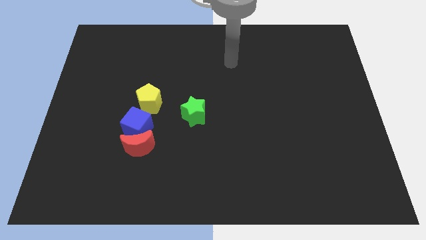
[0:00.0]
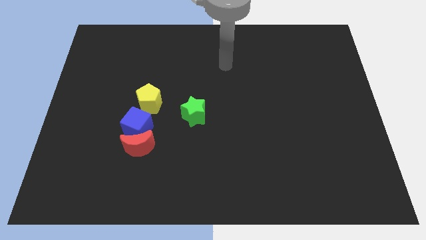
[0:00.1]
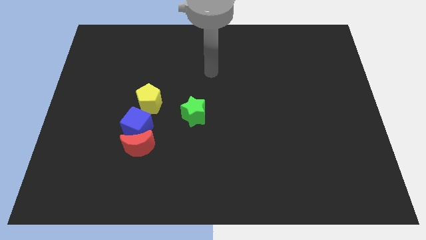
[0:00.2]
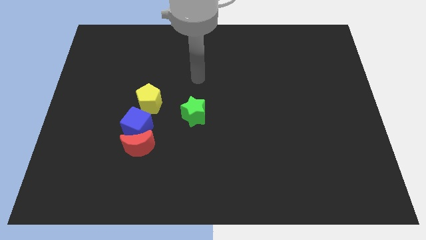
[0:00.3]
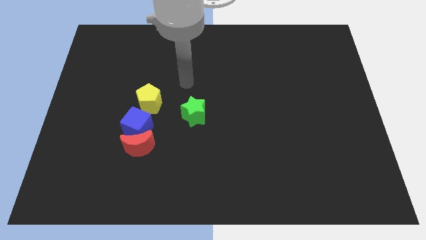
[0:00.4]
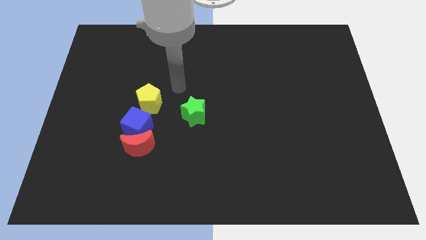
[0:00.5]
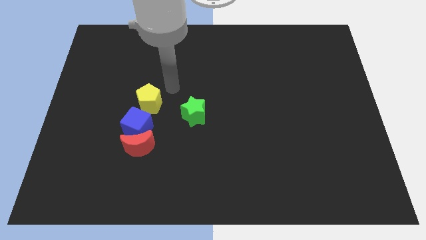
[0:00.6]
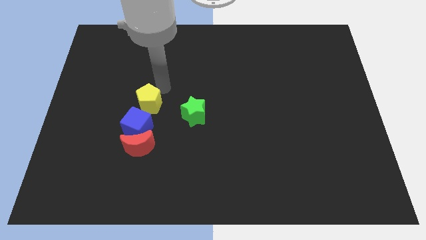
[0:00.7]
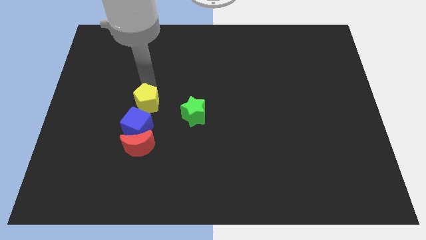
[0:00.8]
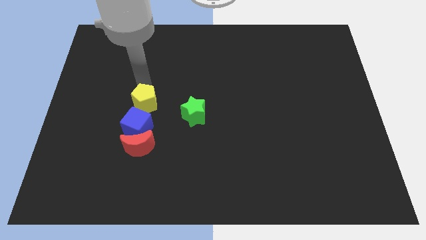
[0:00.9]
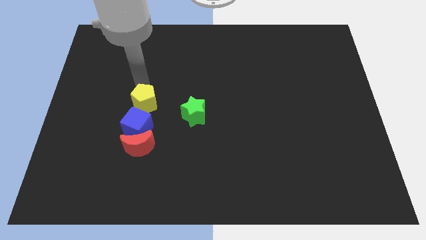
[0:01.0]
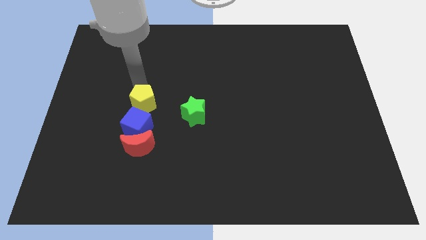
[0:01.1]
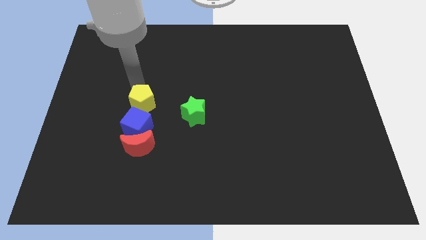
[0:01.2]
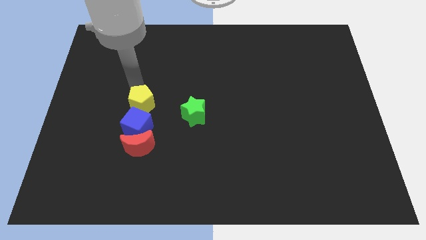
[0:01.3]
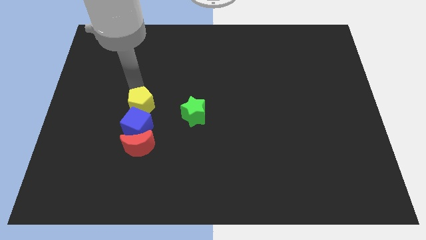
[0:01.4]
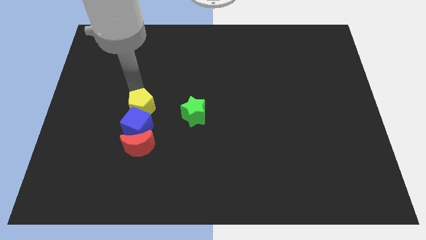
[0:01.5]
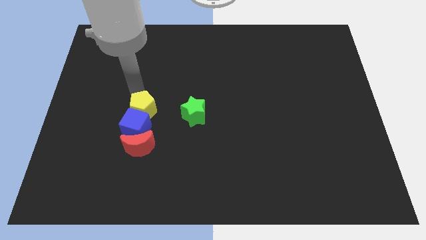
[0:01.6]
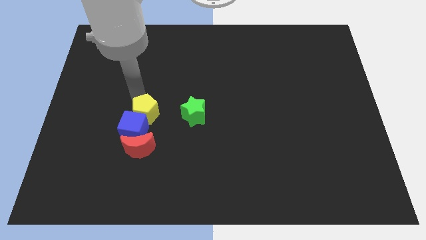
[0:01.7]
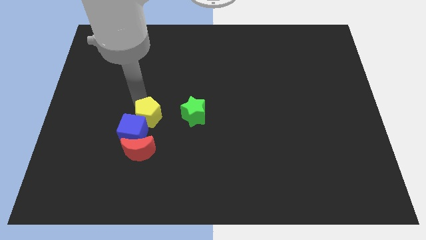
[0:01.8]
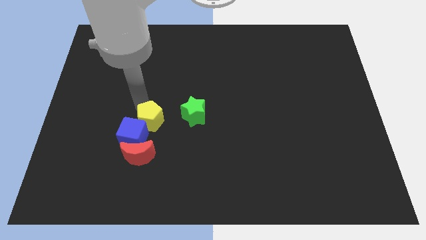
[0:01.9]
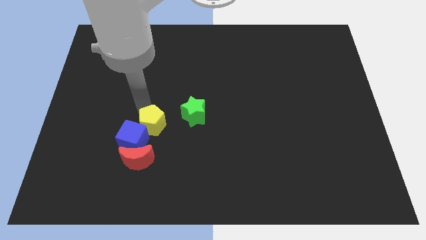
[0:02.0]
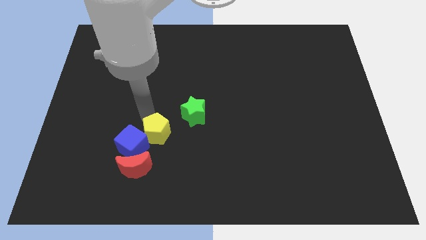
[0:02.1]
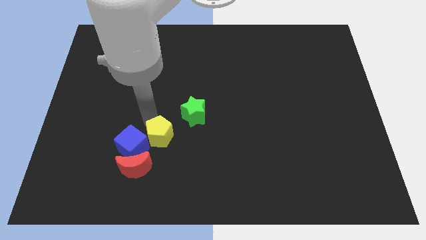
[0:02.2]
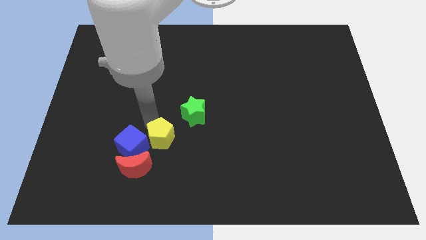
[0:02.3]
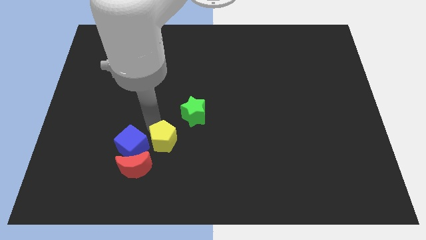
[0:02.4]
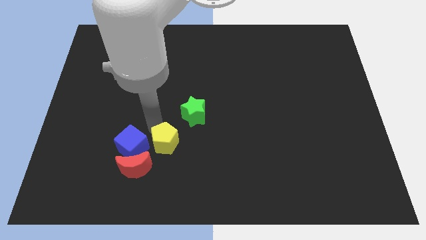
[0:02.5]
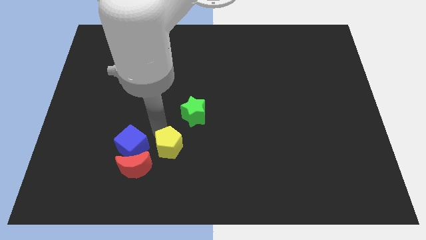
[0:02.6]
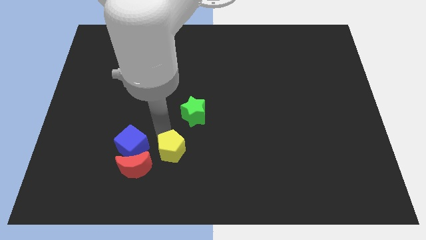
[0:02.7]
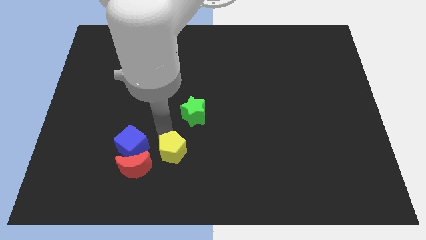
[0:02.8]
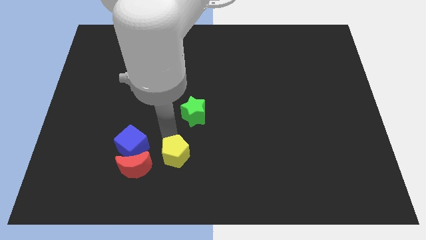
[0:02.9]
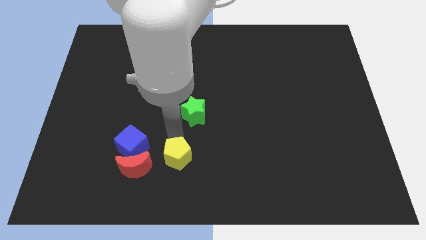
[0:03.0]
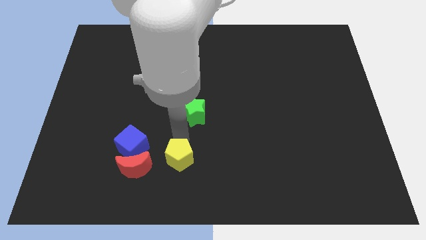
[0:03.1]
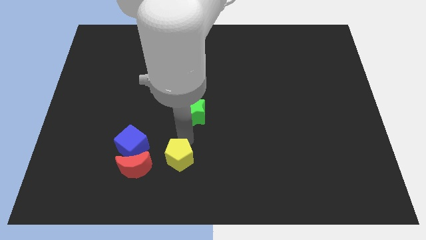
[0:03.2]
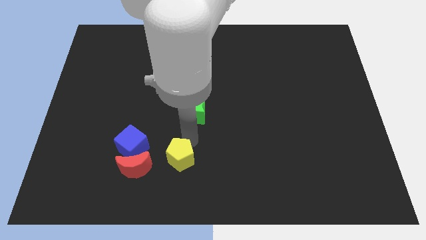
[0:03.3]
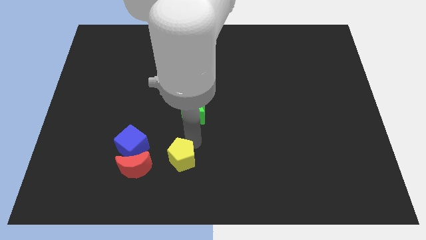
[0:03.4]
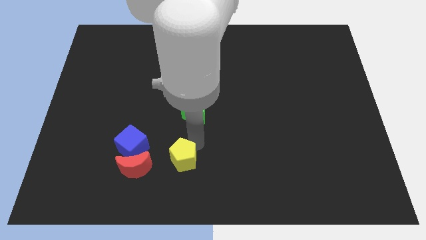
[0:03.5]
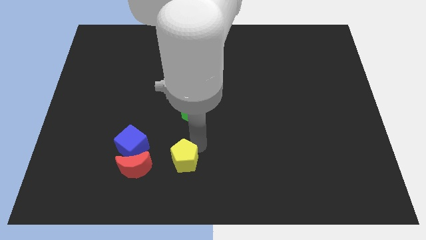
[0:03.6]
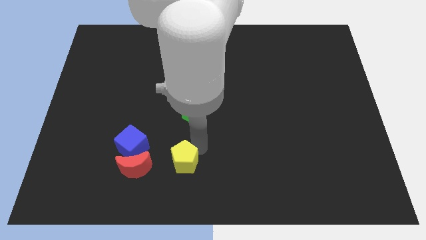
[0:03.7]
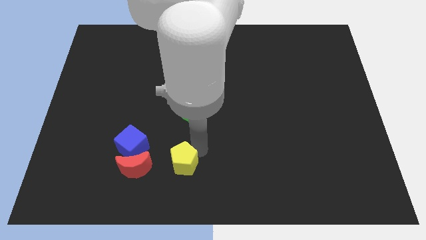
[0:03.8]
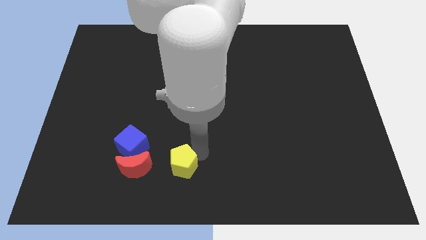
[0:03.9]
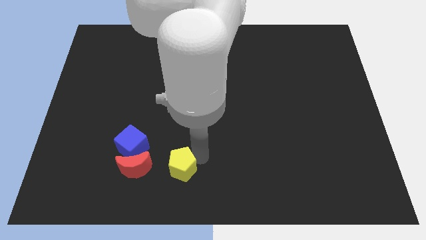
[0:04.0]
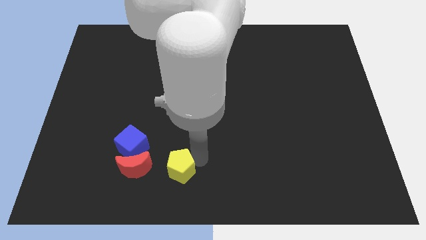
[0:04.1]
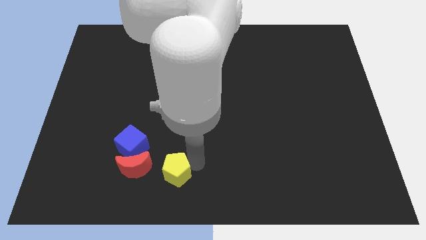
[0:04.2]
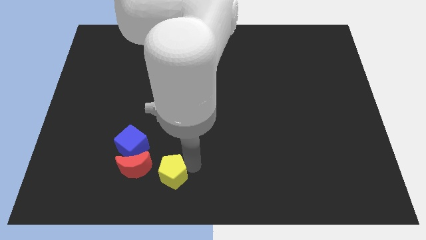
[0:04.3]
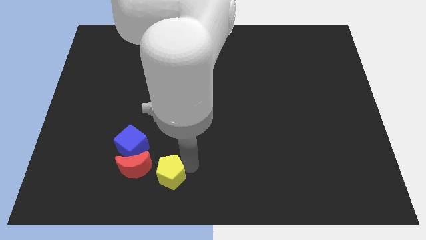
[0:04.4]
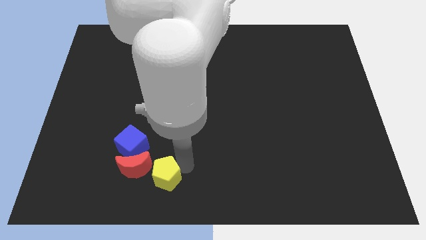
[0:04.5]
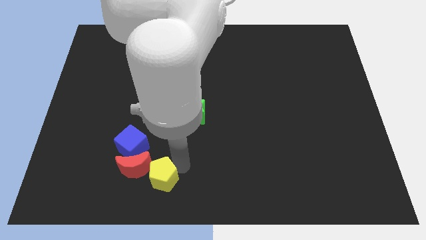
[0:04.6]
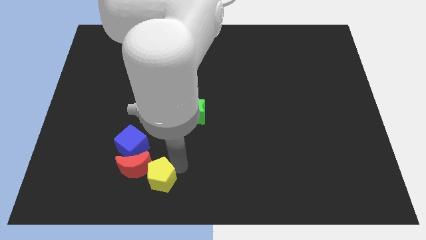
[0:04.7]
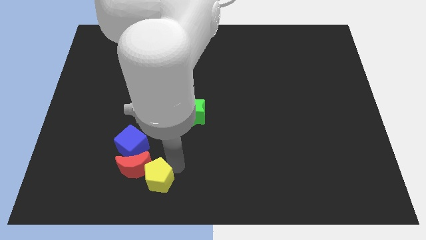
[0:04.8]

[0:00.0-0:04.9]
put the yellow block next to the moon

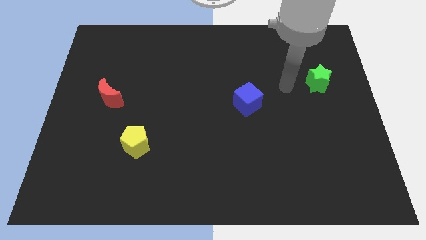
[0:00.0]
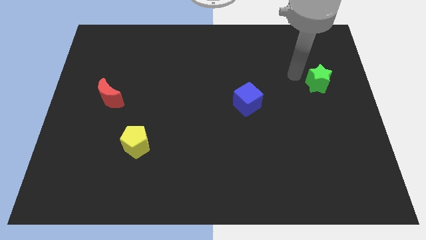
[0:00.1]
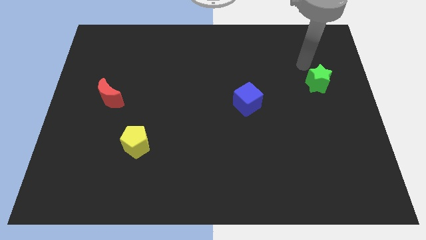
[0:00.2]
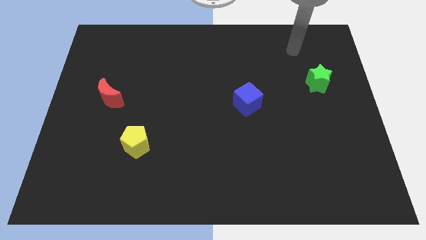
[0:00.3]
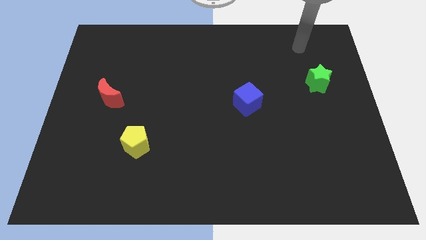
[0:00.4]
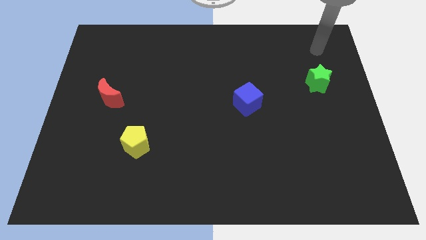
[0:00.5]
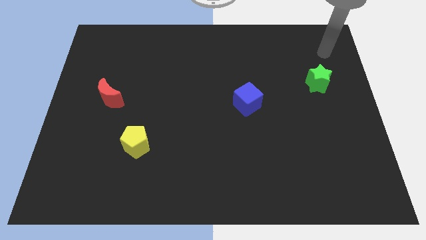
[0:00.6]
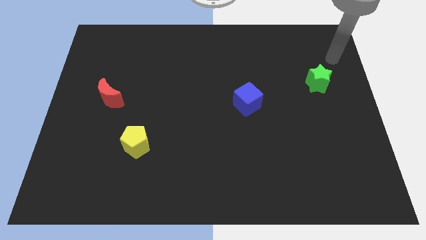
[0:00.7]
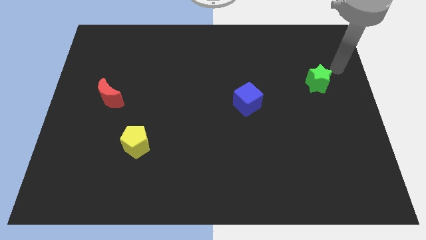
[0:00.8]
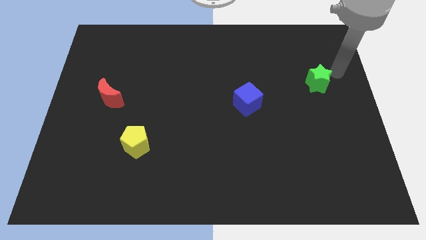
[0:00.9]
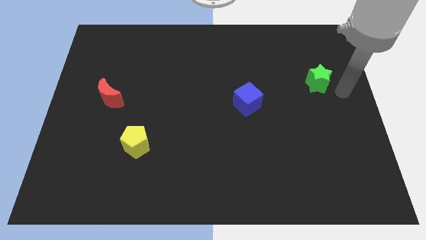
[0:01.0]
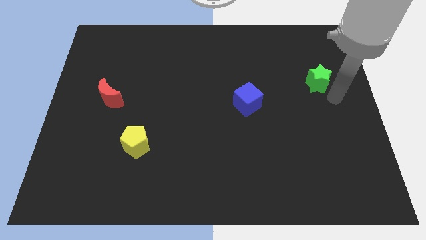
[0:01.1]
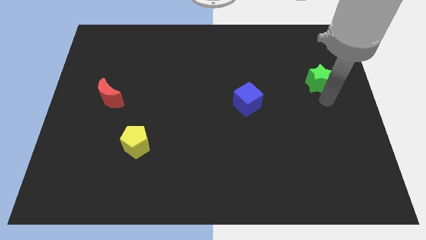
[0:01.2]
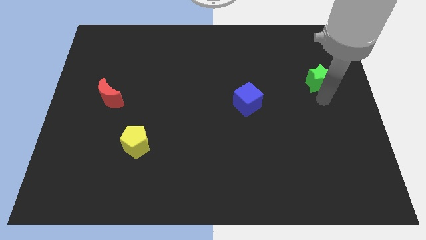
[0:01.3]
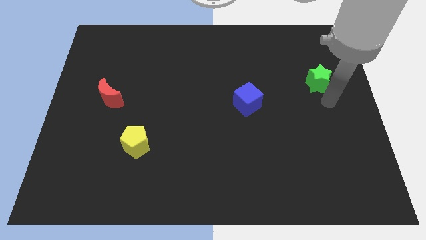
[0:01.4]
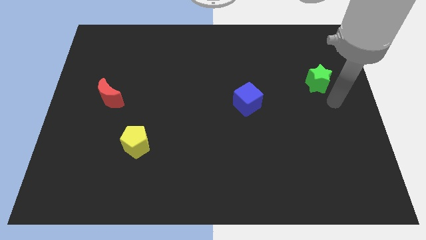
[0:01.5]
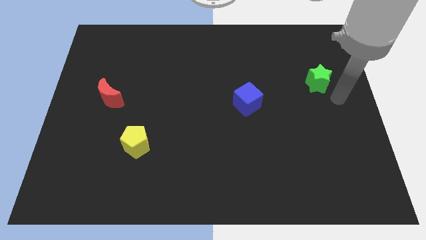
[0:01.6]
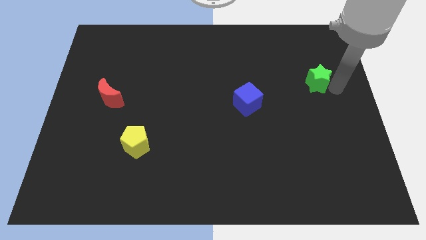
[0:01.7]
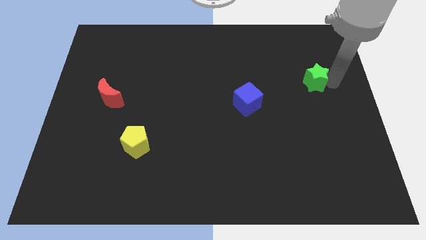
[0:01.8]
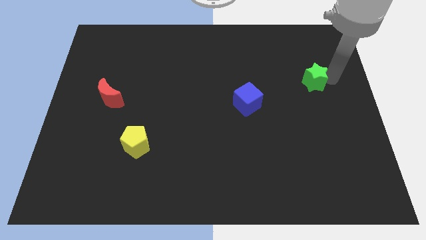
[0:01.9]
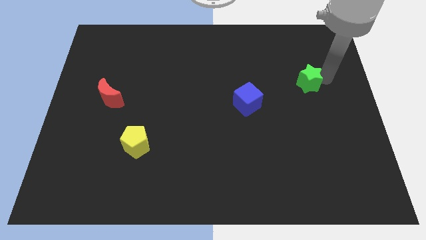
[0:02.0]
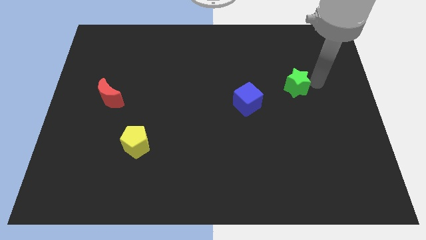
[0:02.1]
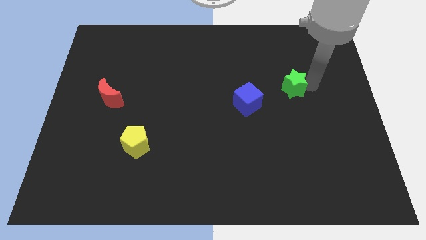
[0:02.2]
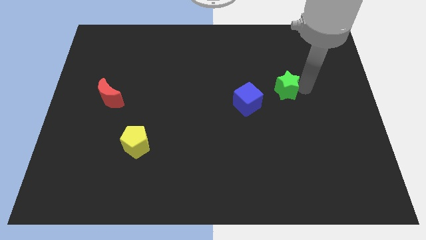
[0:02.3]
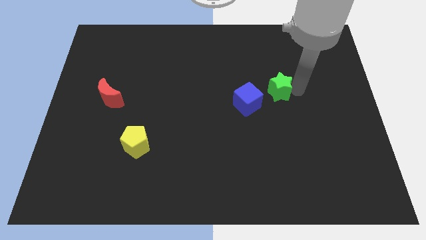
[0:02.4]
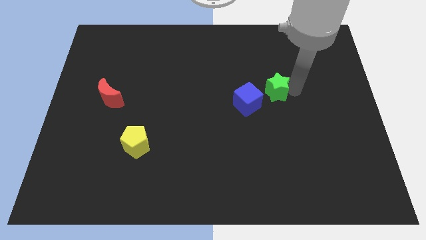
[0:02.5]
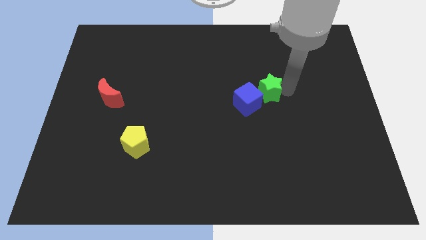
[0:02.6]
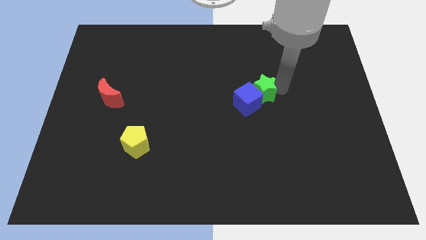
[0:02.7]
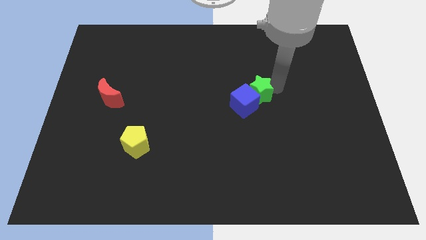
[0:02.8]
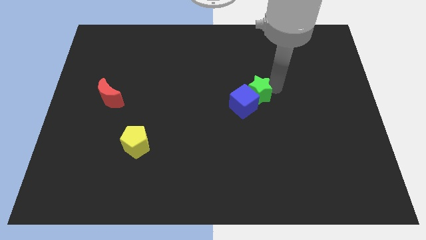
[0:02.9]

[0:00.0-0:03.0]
slide the green block towards the cube

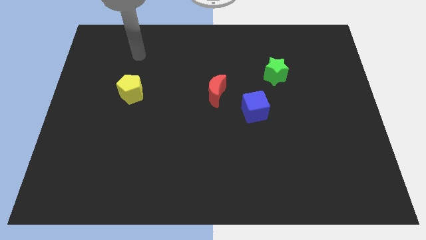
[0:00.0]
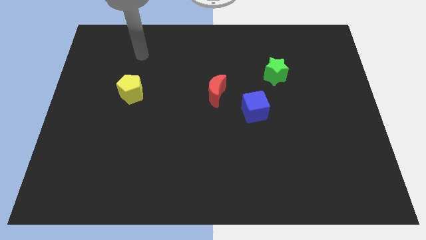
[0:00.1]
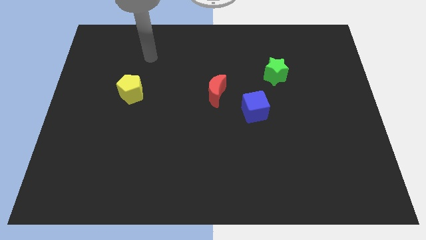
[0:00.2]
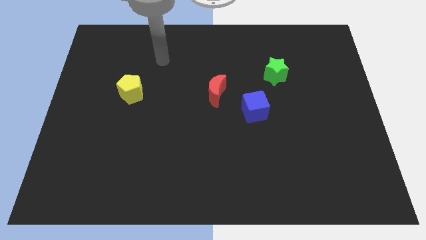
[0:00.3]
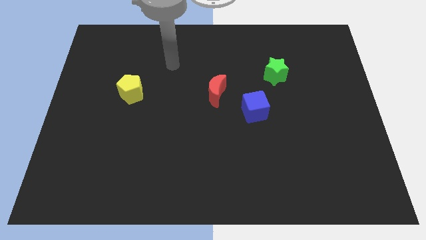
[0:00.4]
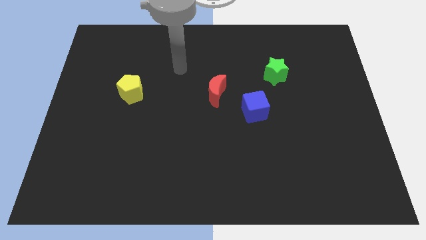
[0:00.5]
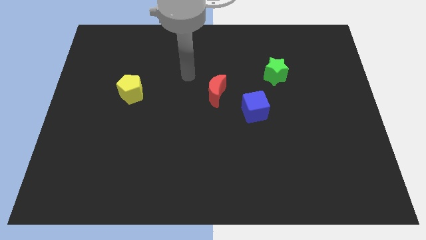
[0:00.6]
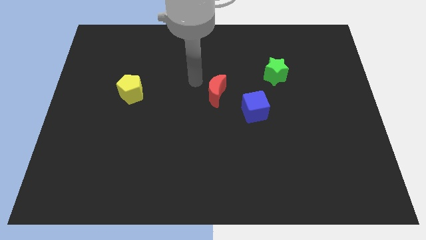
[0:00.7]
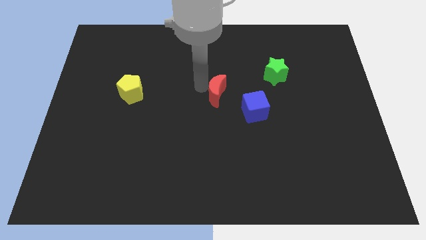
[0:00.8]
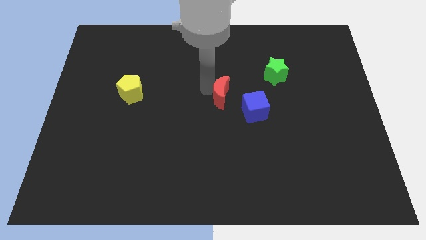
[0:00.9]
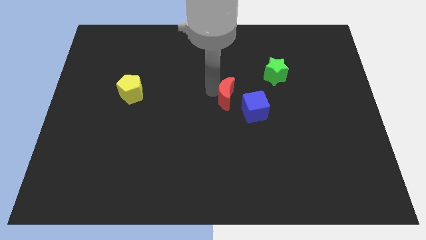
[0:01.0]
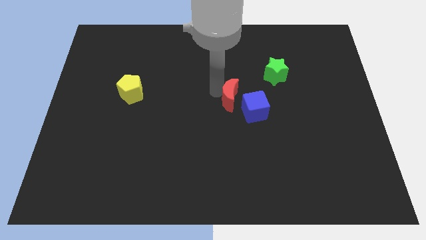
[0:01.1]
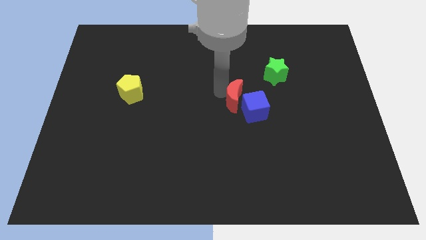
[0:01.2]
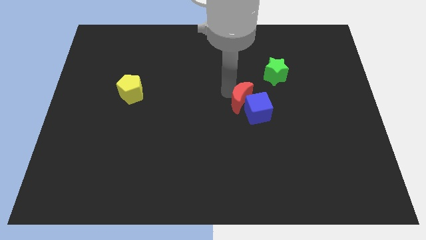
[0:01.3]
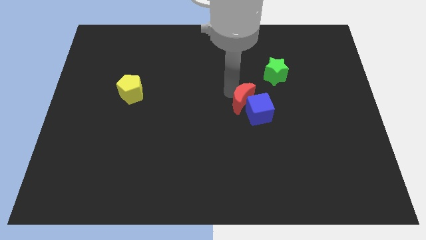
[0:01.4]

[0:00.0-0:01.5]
push the red block close to the blue cube
